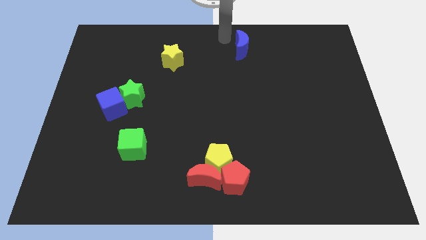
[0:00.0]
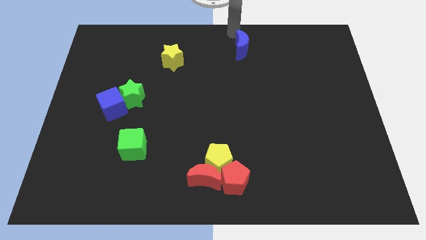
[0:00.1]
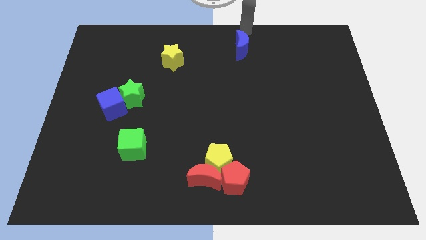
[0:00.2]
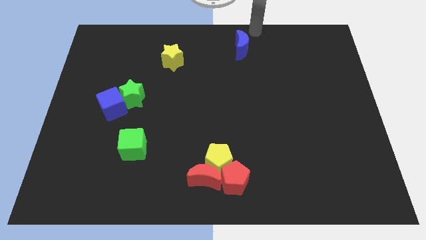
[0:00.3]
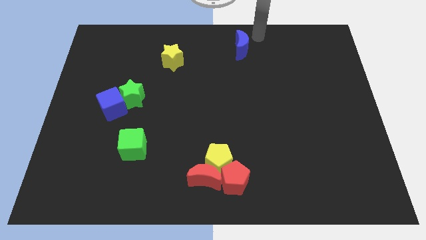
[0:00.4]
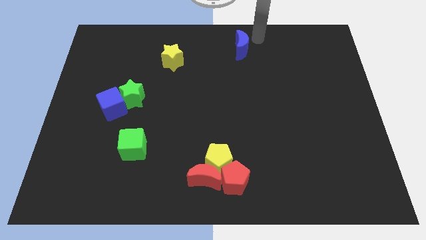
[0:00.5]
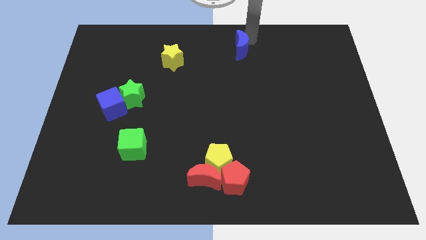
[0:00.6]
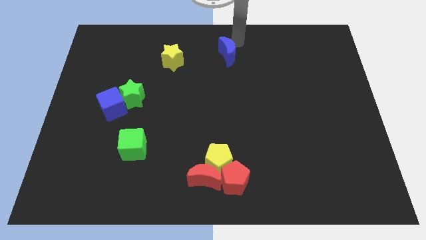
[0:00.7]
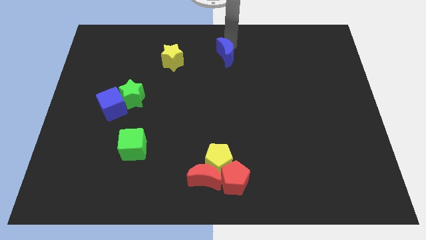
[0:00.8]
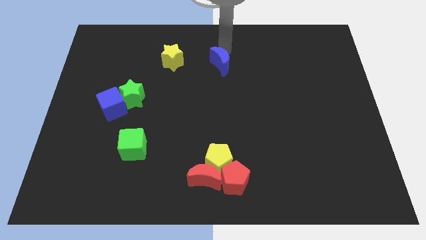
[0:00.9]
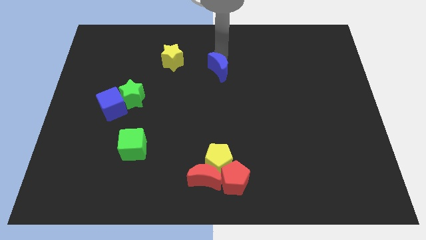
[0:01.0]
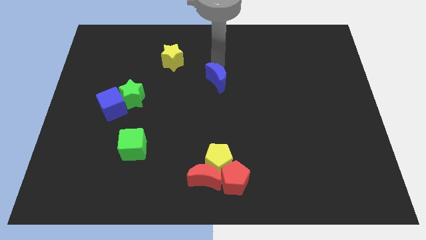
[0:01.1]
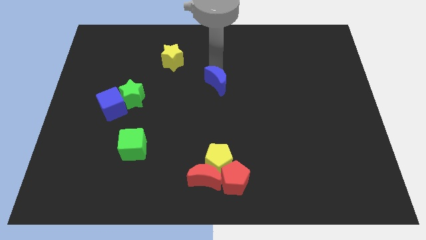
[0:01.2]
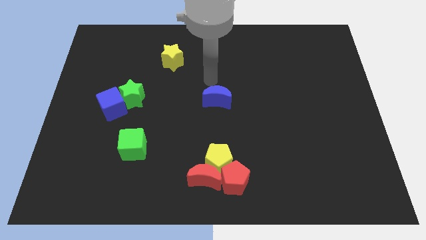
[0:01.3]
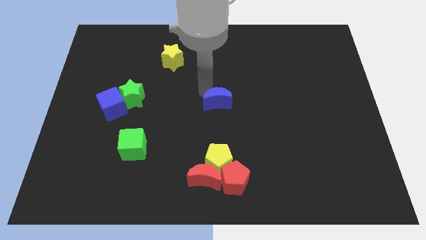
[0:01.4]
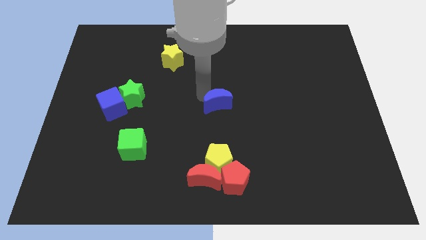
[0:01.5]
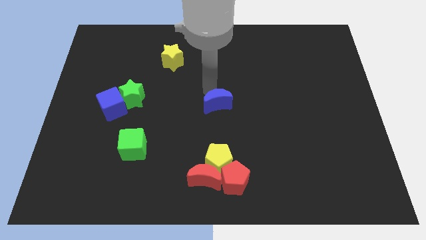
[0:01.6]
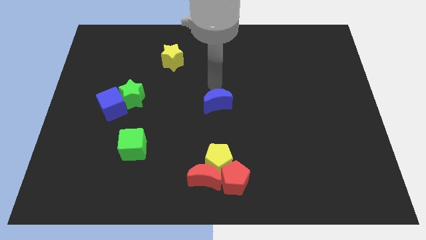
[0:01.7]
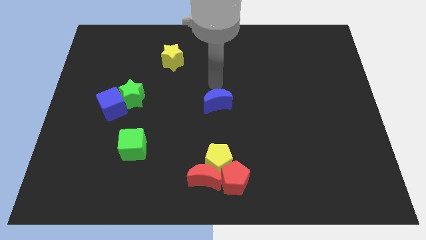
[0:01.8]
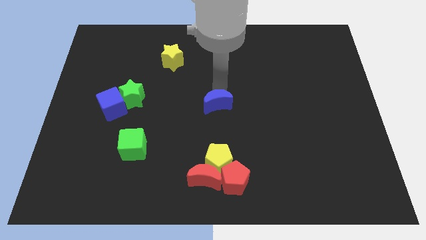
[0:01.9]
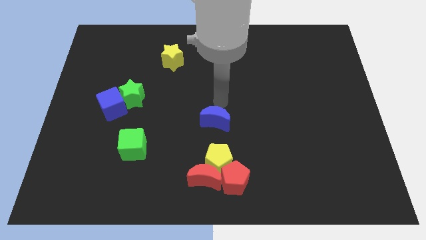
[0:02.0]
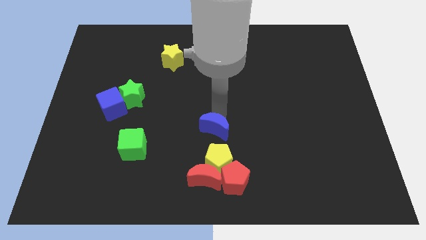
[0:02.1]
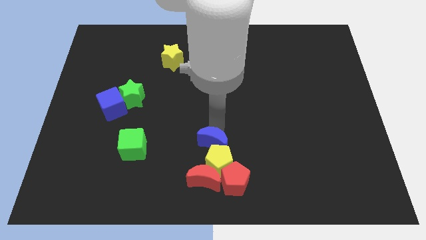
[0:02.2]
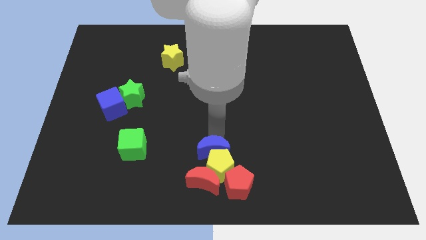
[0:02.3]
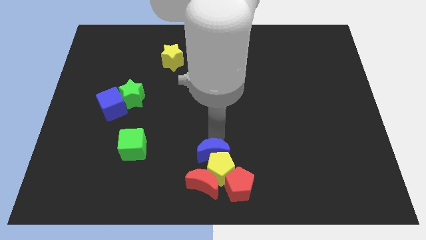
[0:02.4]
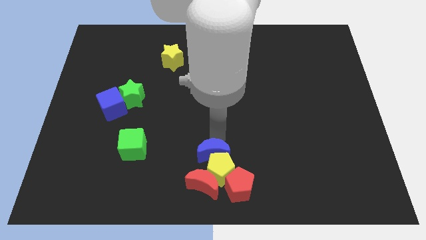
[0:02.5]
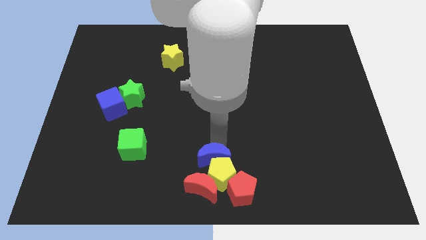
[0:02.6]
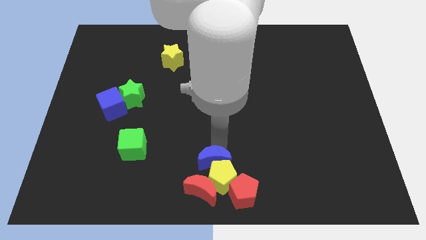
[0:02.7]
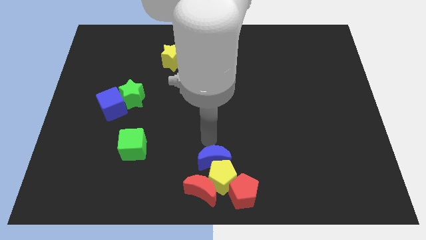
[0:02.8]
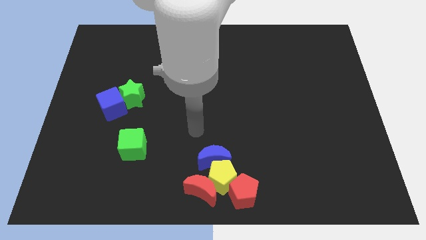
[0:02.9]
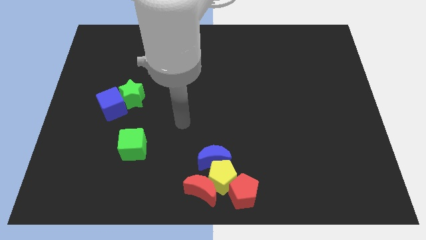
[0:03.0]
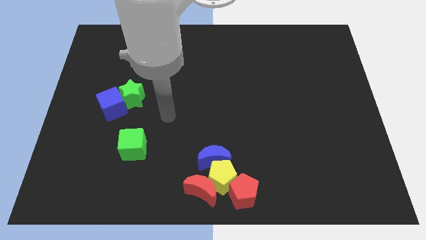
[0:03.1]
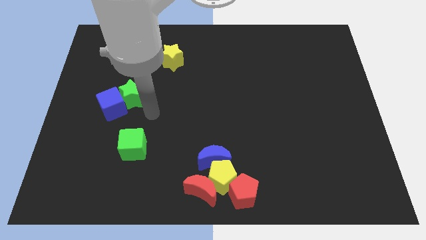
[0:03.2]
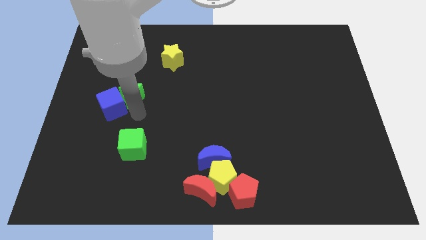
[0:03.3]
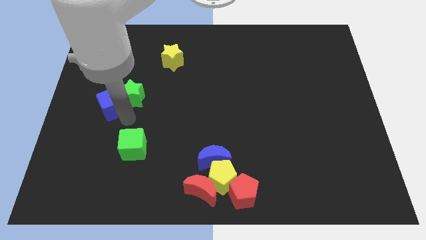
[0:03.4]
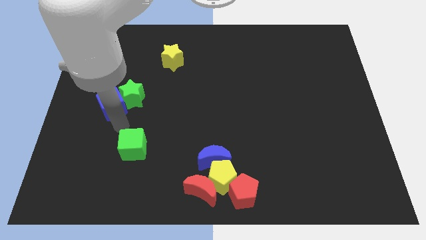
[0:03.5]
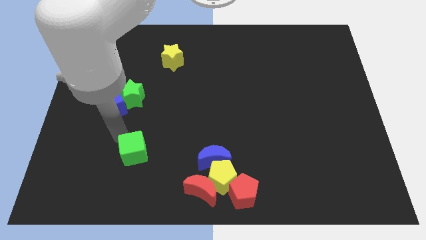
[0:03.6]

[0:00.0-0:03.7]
push red blocks yellow pentagon and blue moon to the bottom middle

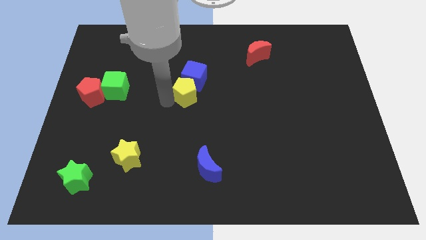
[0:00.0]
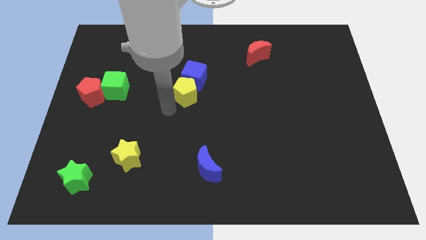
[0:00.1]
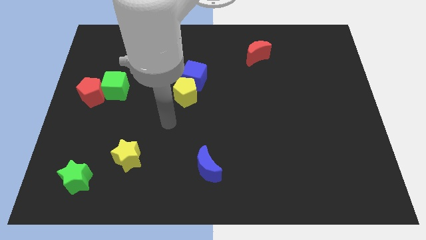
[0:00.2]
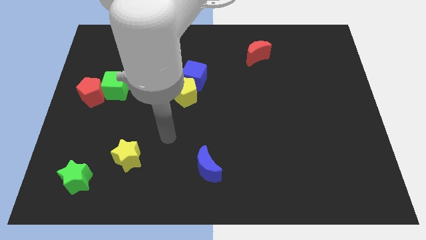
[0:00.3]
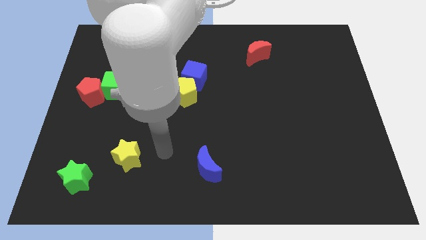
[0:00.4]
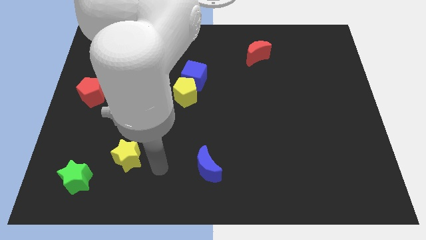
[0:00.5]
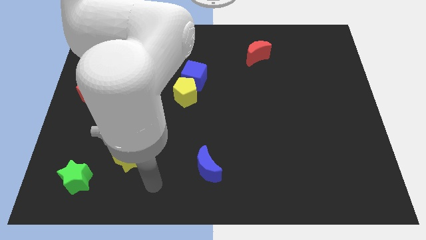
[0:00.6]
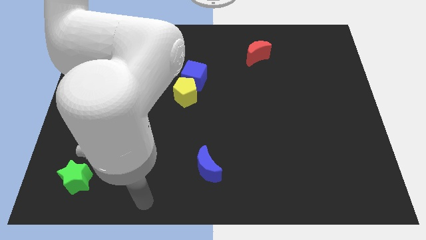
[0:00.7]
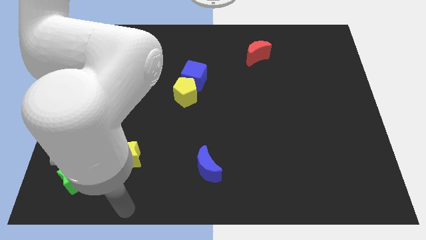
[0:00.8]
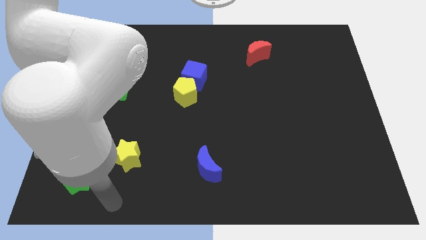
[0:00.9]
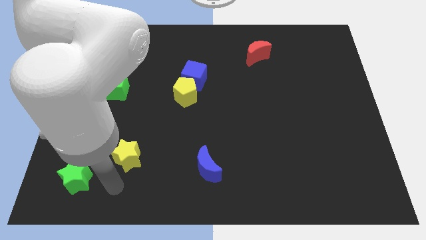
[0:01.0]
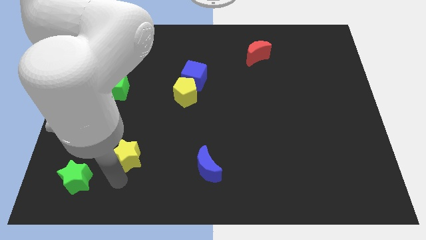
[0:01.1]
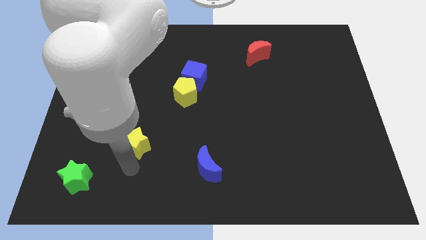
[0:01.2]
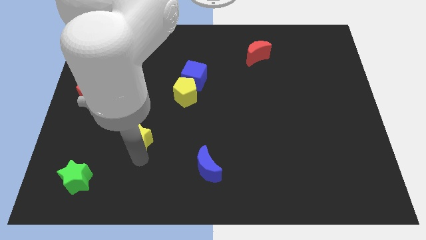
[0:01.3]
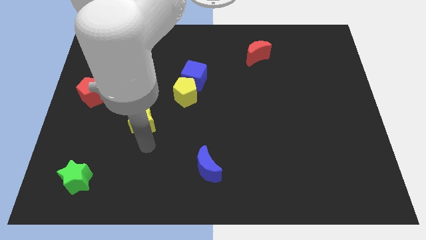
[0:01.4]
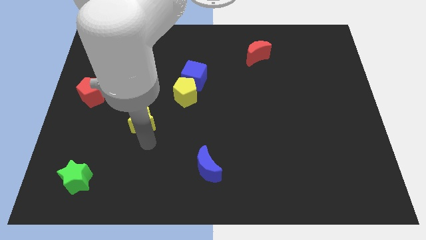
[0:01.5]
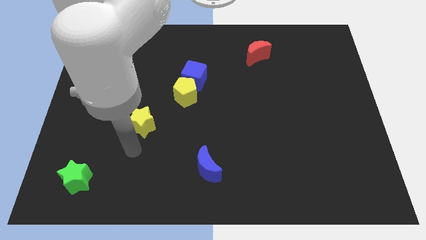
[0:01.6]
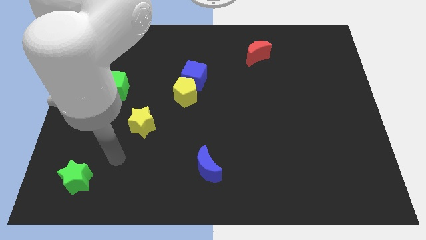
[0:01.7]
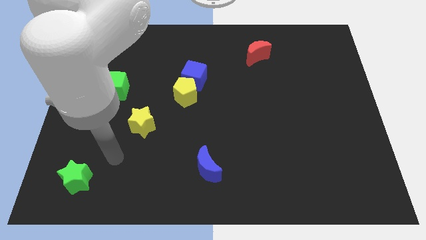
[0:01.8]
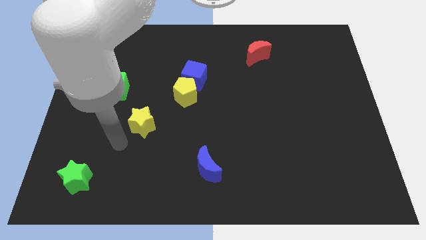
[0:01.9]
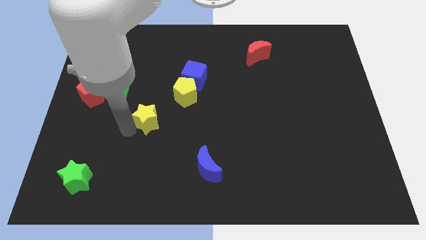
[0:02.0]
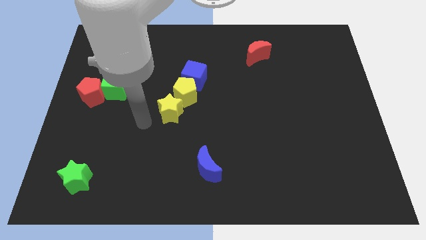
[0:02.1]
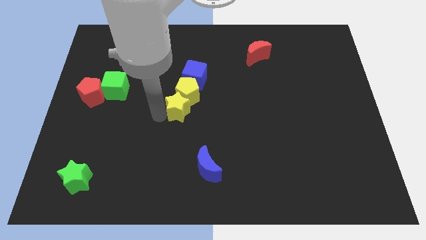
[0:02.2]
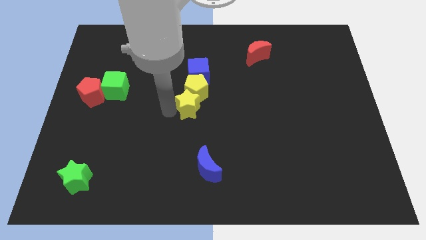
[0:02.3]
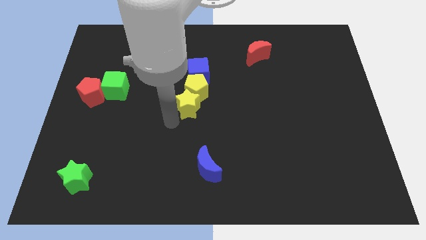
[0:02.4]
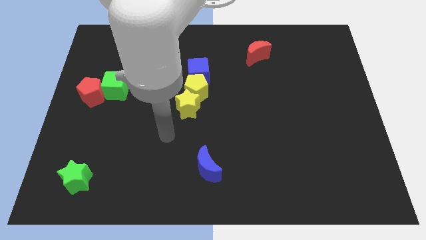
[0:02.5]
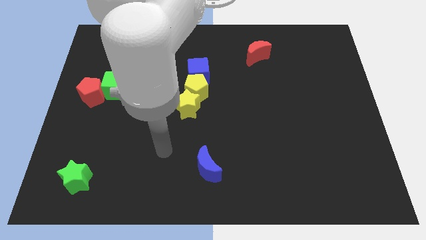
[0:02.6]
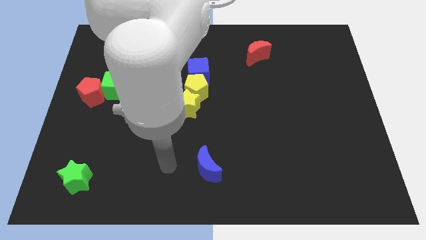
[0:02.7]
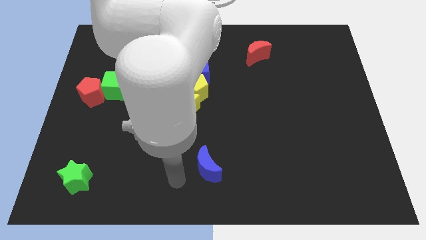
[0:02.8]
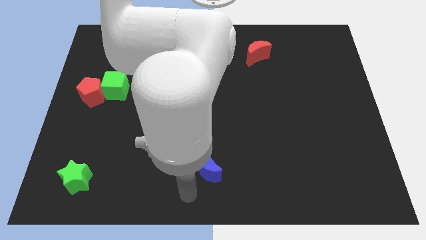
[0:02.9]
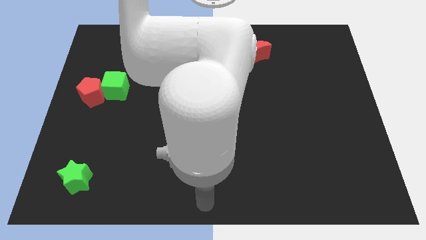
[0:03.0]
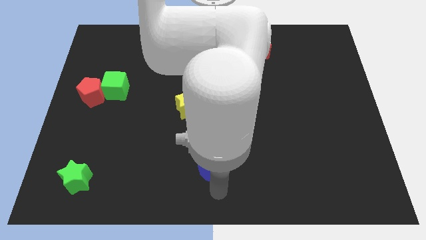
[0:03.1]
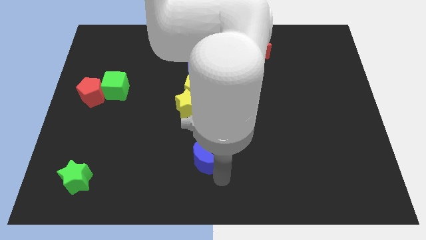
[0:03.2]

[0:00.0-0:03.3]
push the yellow star below the yellow pentagon

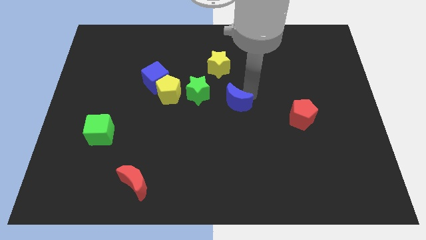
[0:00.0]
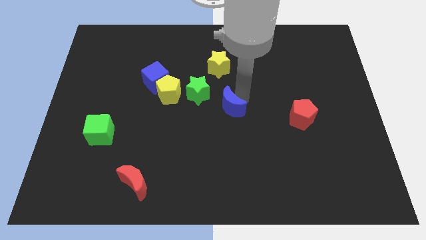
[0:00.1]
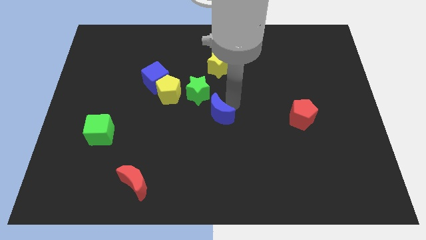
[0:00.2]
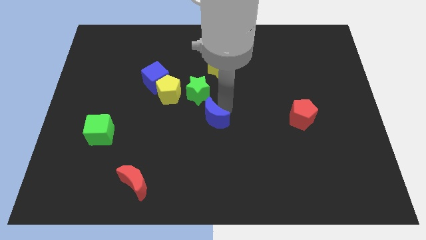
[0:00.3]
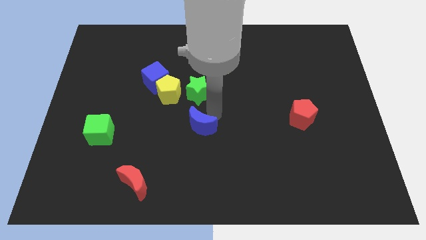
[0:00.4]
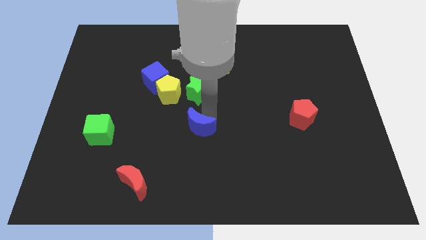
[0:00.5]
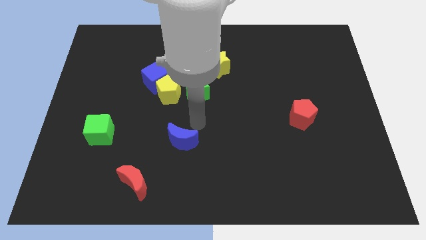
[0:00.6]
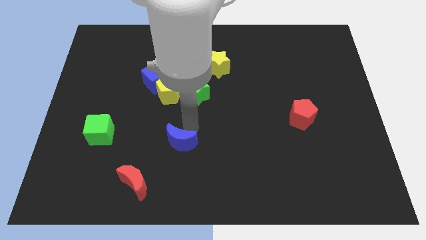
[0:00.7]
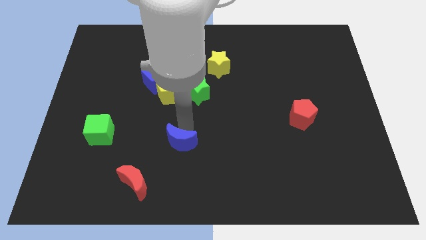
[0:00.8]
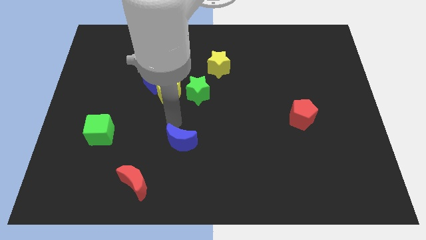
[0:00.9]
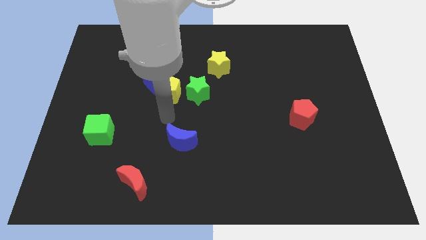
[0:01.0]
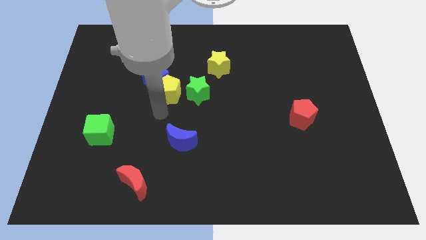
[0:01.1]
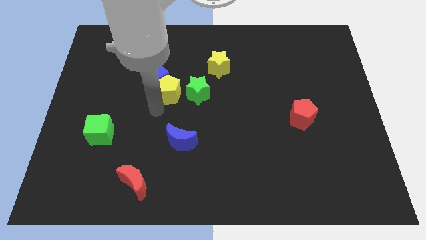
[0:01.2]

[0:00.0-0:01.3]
move the blue crescent diagonally towards the red crescent

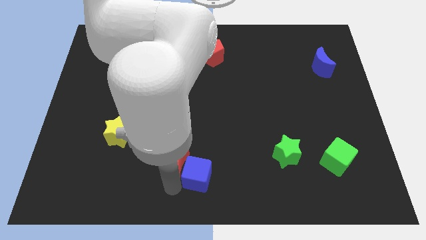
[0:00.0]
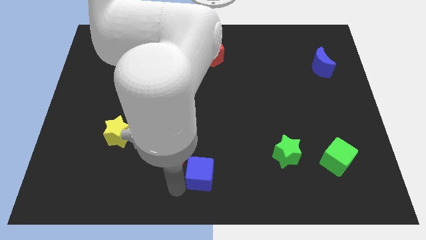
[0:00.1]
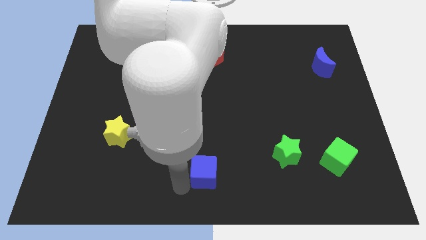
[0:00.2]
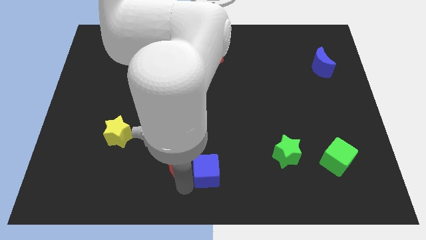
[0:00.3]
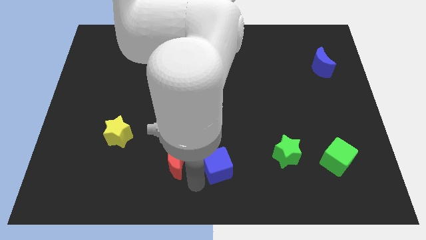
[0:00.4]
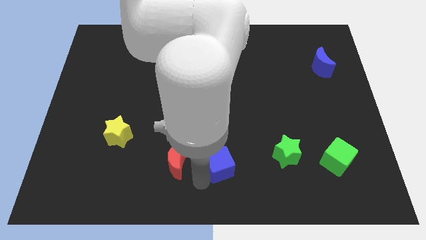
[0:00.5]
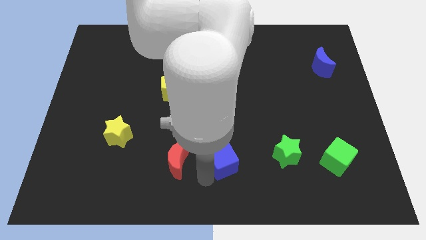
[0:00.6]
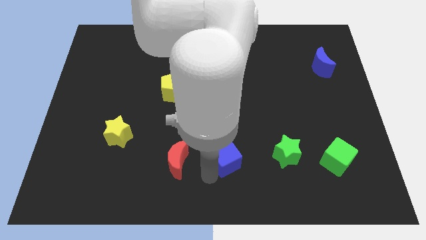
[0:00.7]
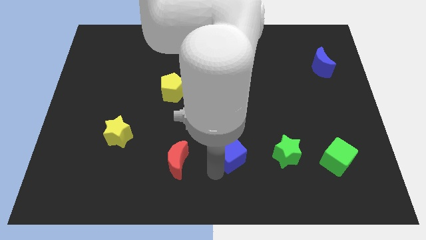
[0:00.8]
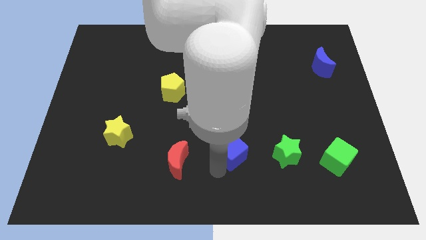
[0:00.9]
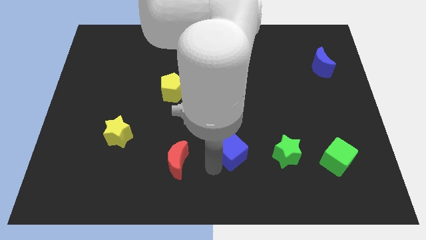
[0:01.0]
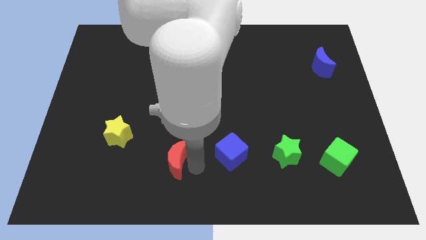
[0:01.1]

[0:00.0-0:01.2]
move the blue cube left beside the green star
